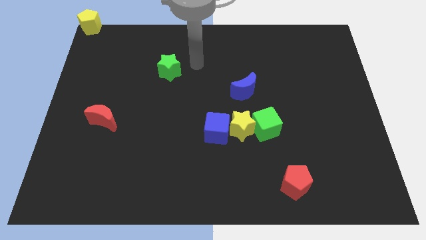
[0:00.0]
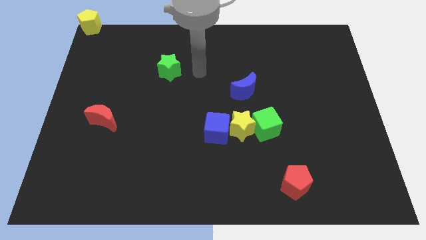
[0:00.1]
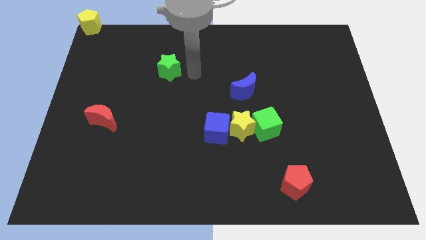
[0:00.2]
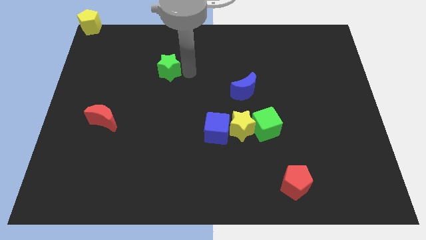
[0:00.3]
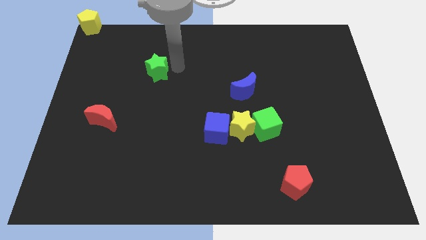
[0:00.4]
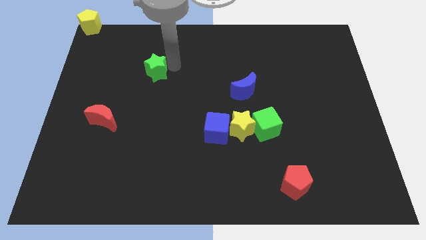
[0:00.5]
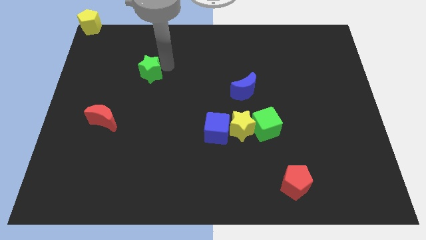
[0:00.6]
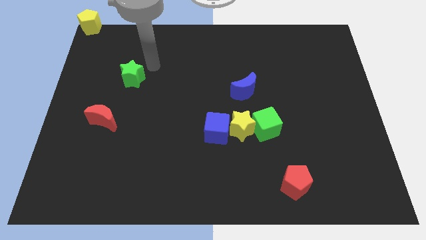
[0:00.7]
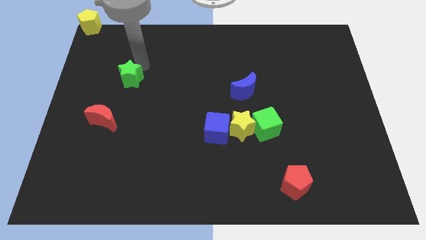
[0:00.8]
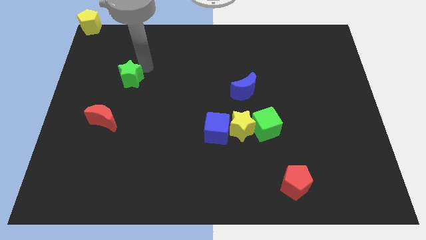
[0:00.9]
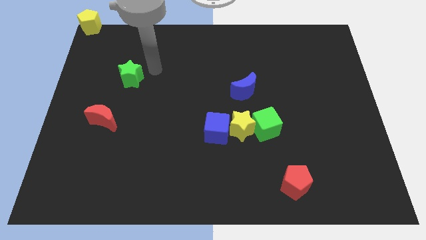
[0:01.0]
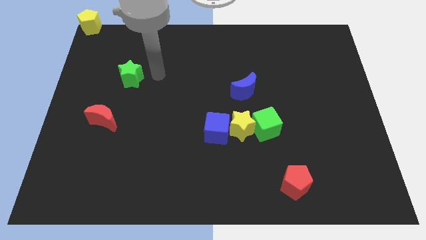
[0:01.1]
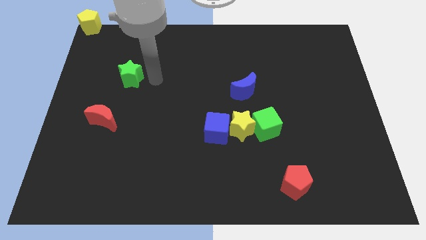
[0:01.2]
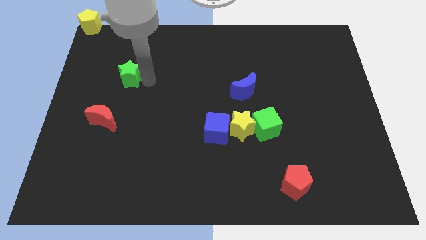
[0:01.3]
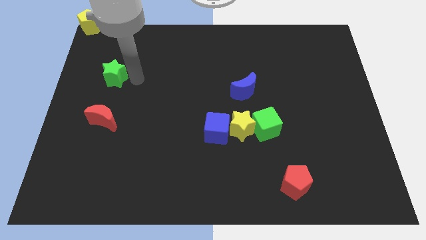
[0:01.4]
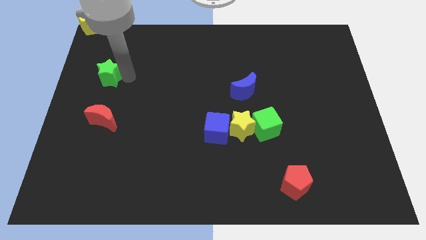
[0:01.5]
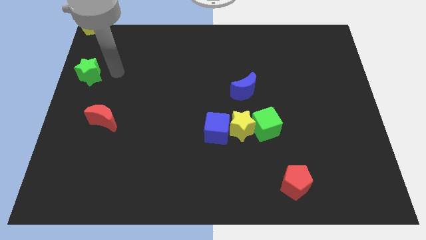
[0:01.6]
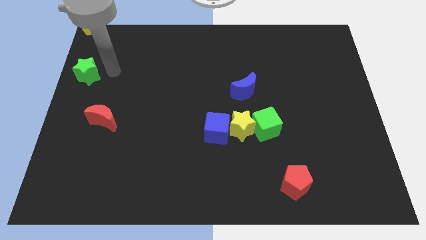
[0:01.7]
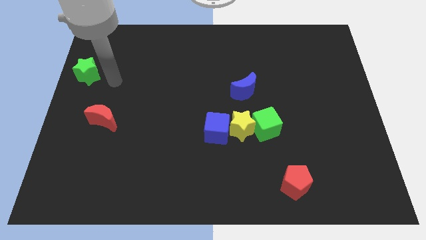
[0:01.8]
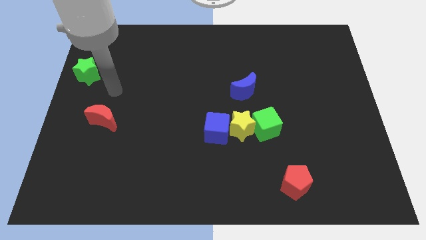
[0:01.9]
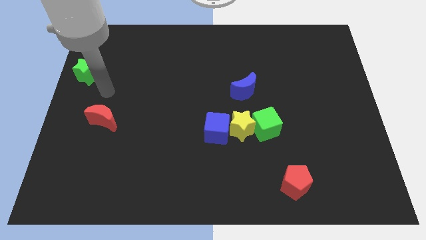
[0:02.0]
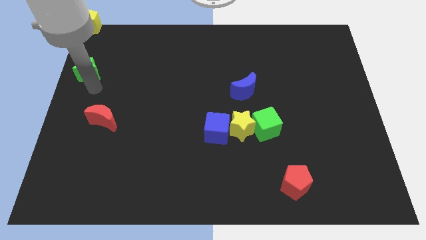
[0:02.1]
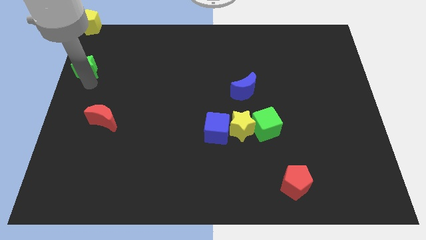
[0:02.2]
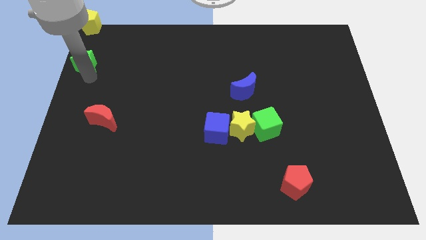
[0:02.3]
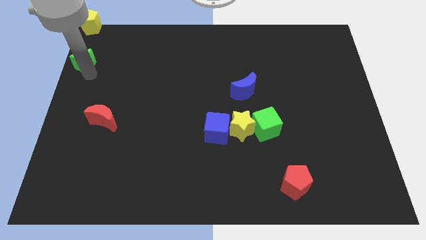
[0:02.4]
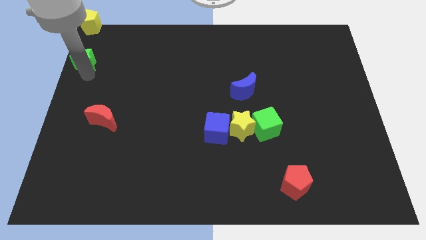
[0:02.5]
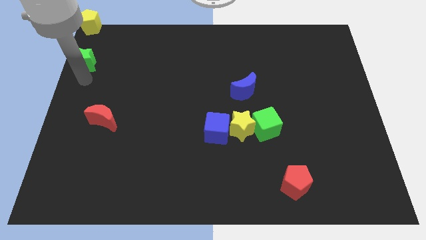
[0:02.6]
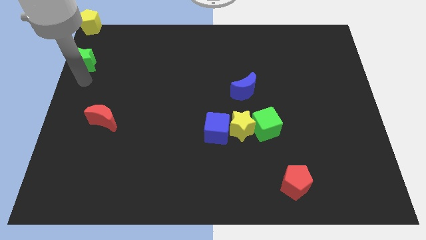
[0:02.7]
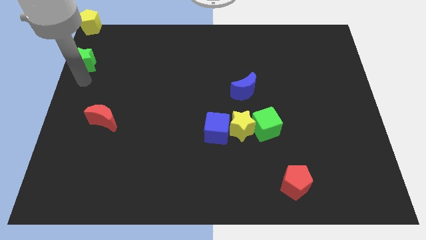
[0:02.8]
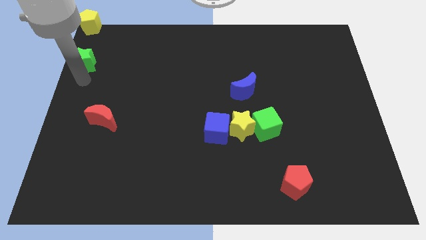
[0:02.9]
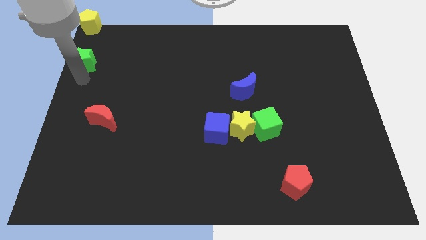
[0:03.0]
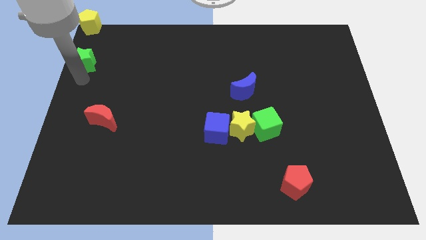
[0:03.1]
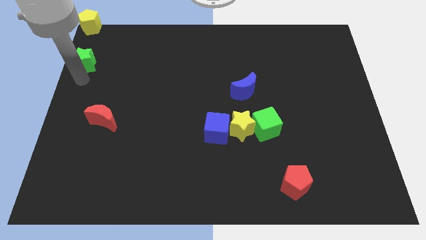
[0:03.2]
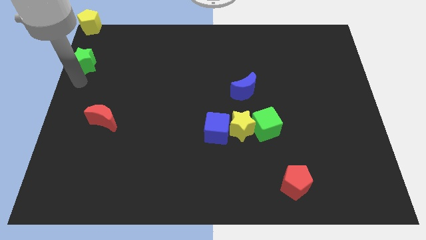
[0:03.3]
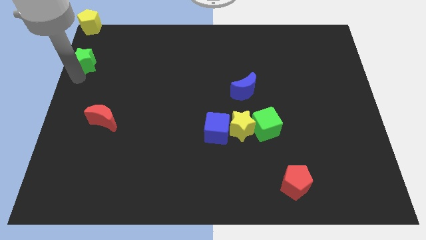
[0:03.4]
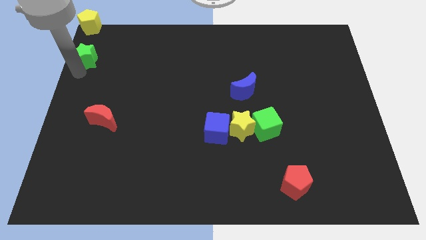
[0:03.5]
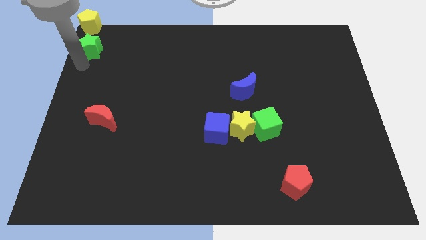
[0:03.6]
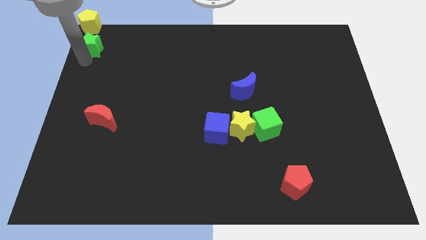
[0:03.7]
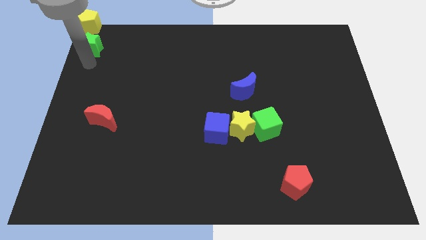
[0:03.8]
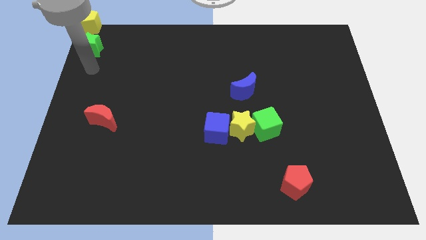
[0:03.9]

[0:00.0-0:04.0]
move the green star towards the yellow pentagon

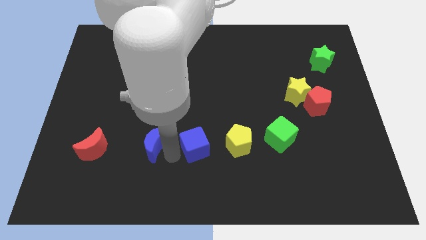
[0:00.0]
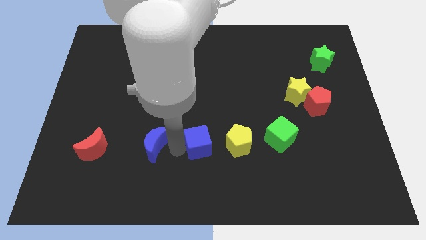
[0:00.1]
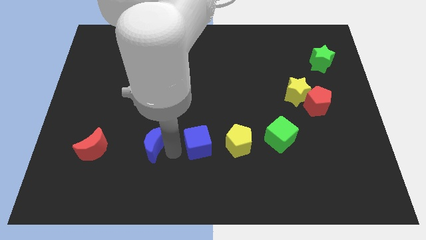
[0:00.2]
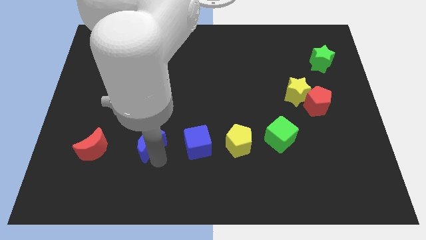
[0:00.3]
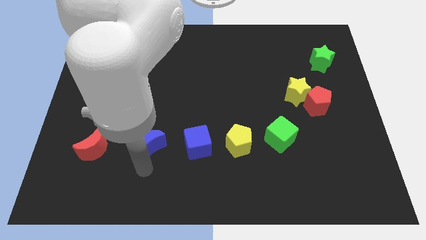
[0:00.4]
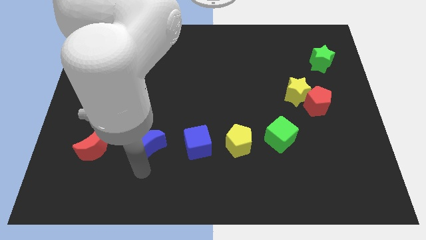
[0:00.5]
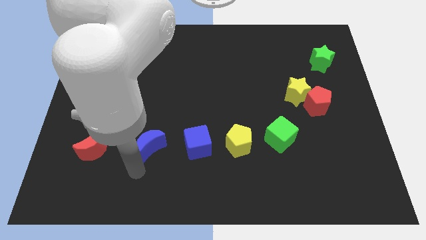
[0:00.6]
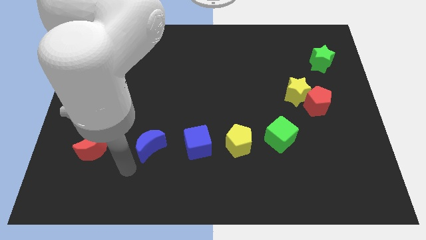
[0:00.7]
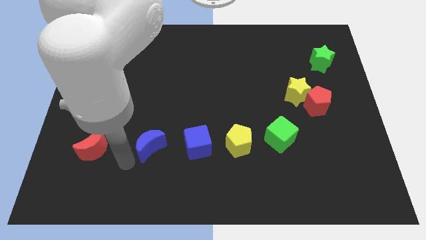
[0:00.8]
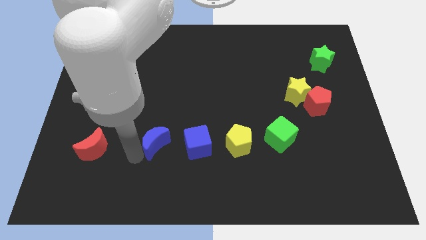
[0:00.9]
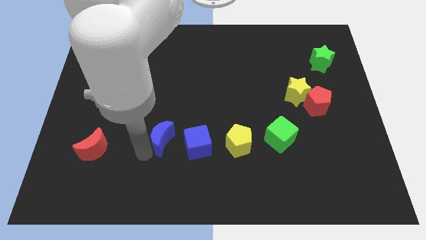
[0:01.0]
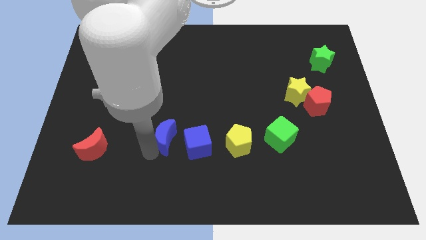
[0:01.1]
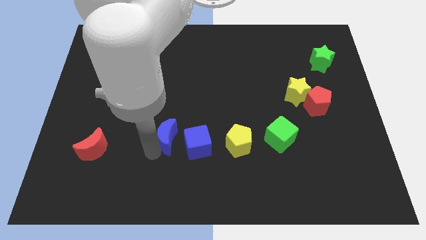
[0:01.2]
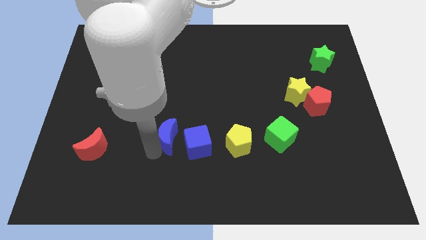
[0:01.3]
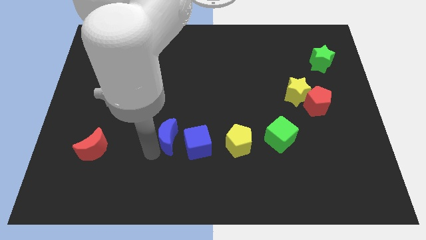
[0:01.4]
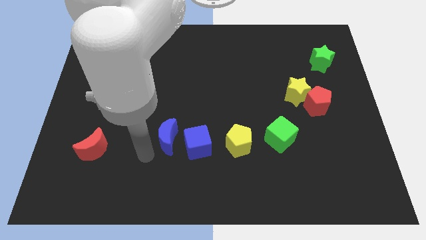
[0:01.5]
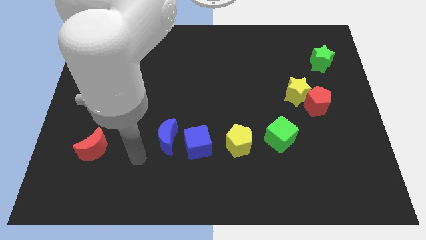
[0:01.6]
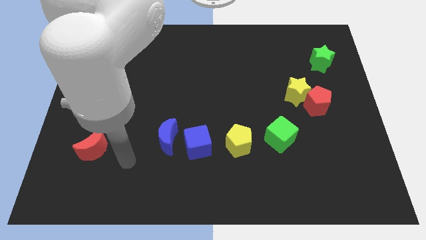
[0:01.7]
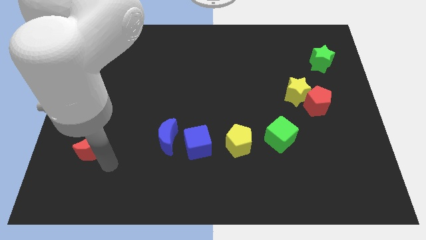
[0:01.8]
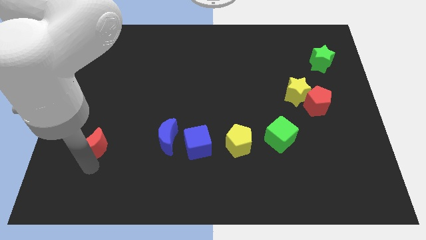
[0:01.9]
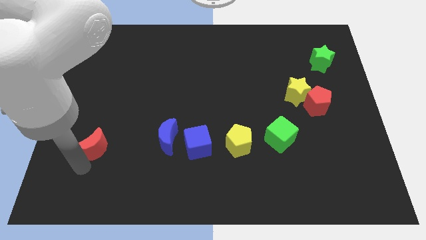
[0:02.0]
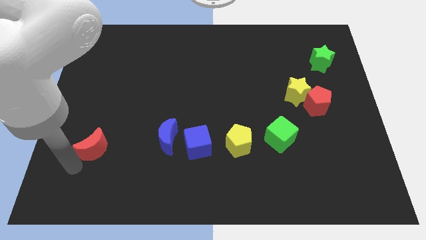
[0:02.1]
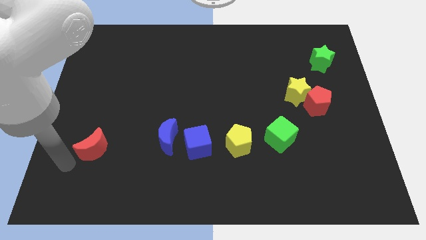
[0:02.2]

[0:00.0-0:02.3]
move the blue crescent towards the blue cube

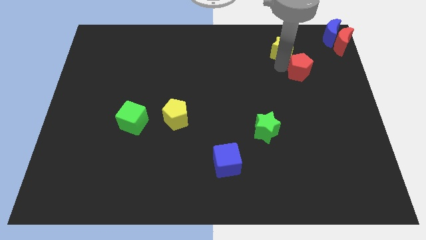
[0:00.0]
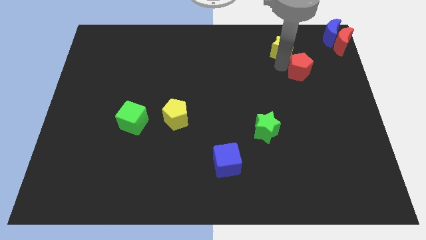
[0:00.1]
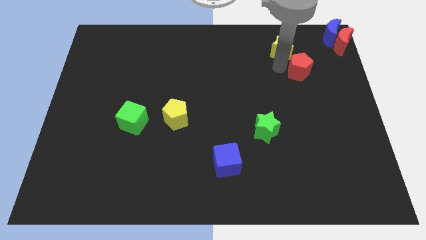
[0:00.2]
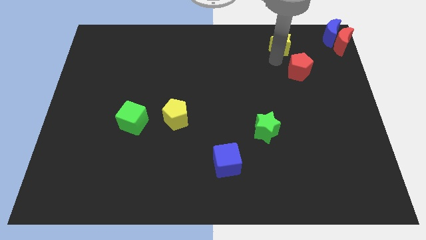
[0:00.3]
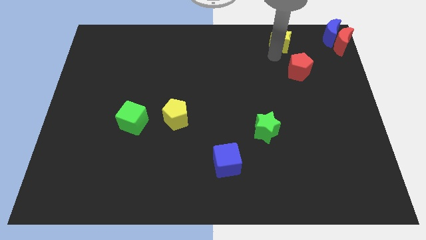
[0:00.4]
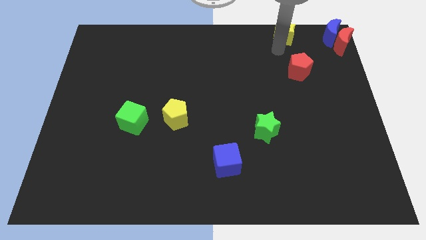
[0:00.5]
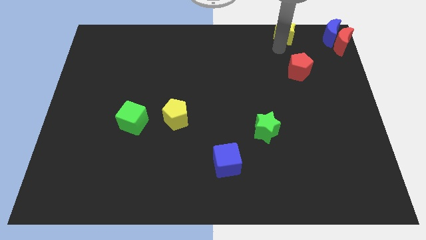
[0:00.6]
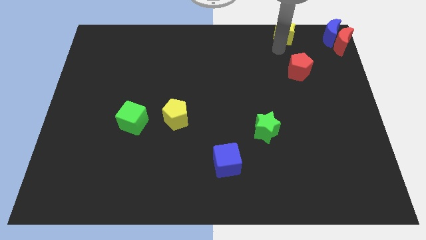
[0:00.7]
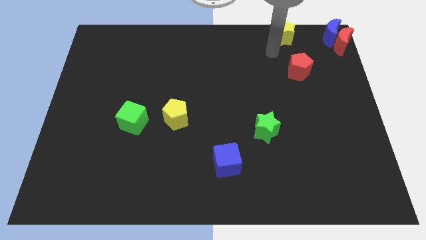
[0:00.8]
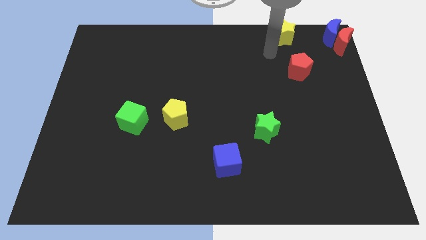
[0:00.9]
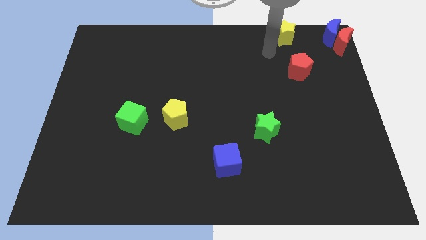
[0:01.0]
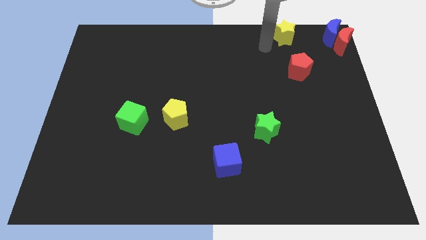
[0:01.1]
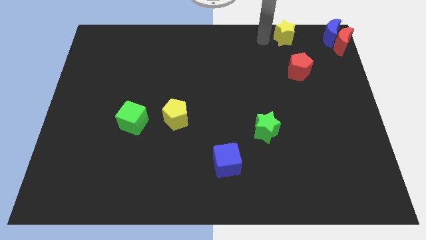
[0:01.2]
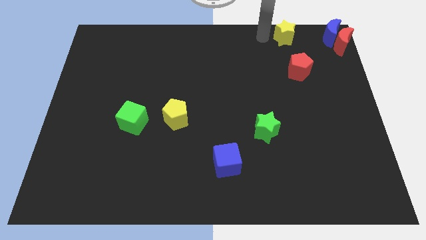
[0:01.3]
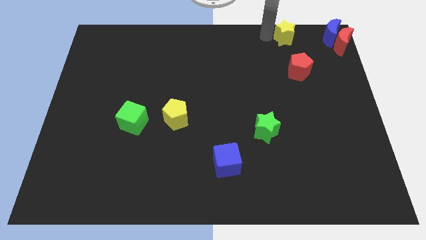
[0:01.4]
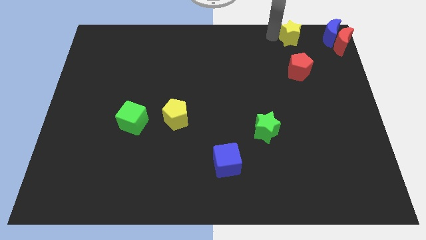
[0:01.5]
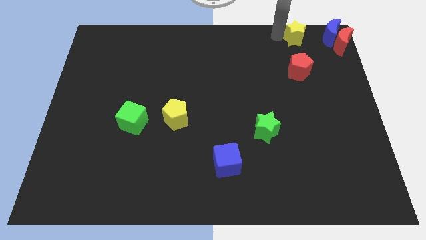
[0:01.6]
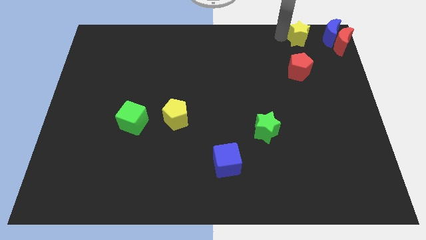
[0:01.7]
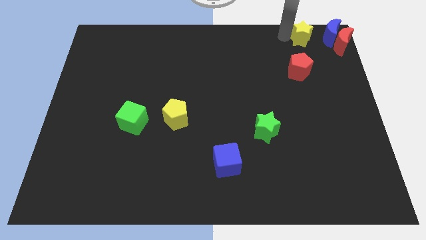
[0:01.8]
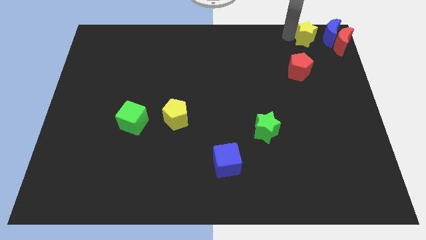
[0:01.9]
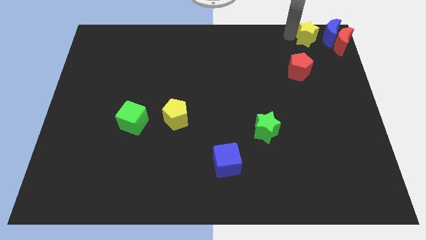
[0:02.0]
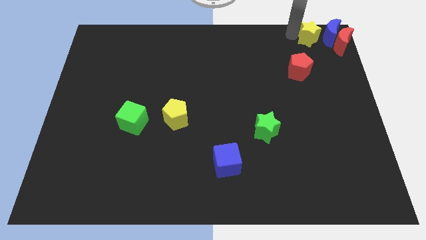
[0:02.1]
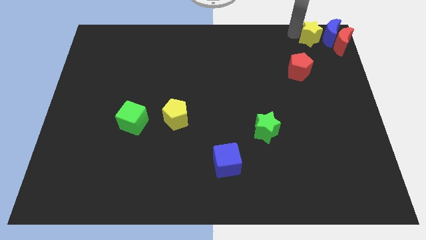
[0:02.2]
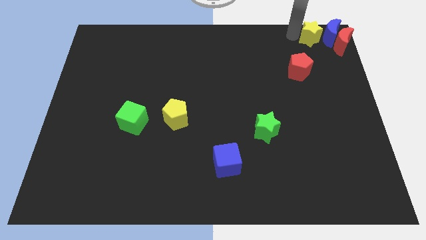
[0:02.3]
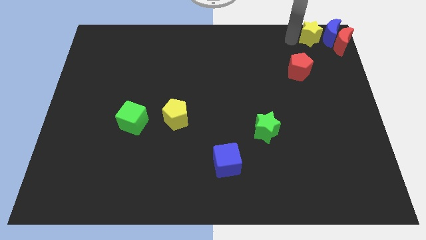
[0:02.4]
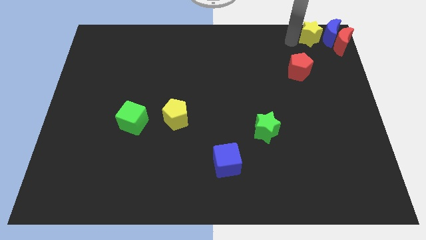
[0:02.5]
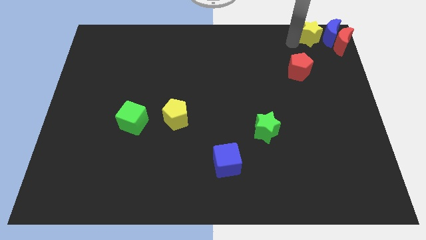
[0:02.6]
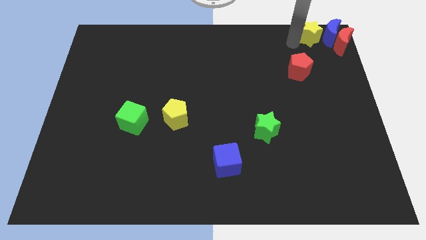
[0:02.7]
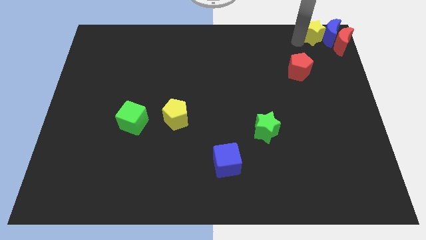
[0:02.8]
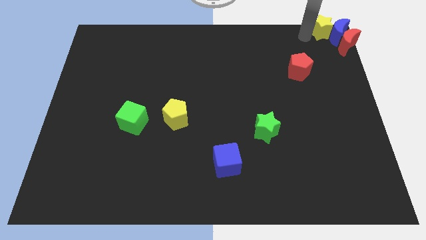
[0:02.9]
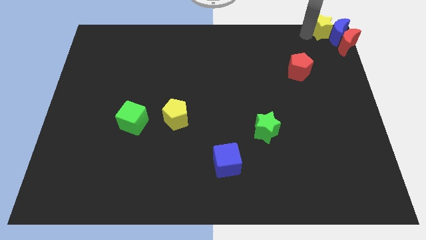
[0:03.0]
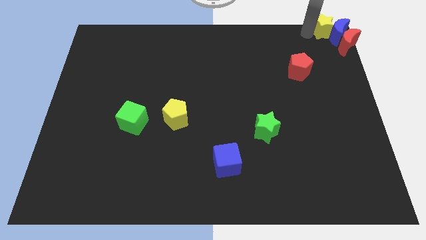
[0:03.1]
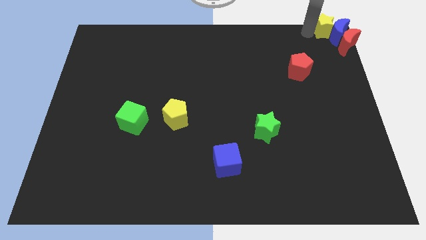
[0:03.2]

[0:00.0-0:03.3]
slightly push the yellow pentagon to the top right
